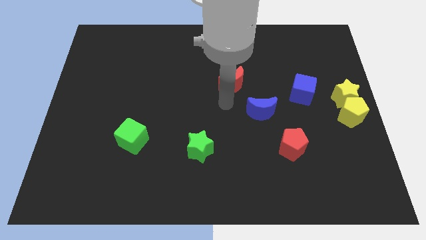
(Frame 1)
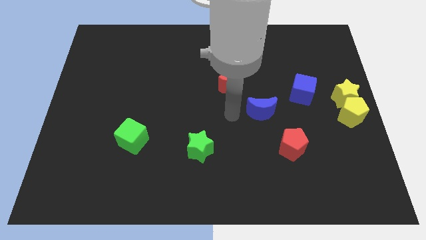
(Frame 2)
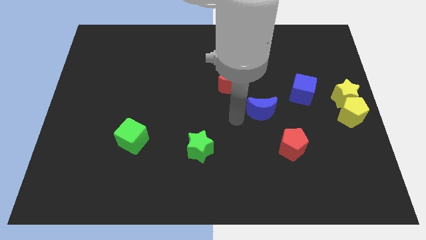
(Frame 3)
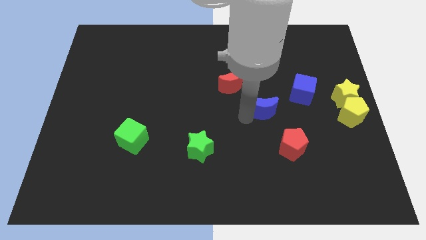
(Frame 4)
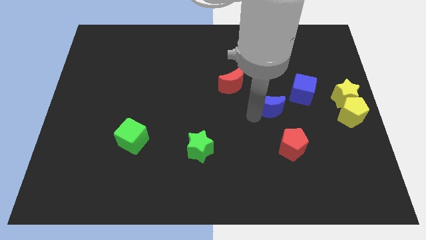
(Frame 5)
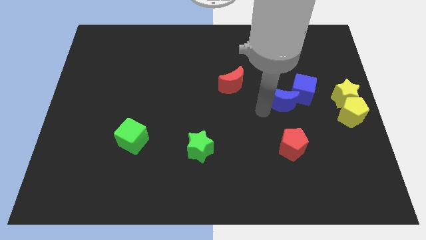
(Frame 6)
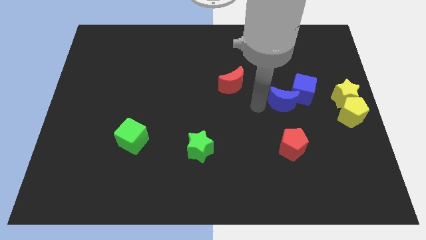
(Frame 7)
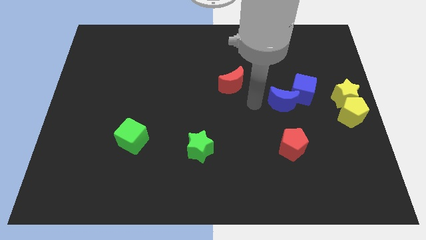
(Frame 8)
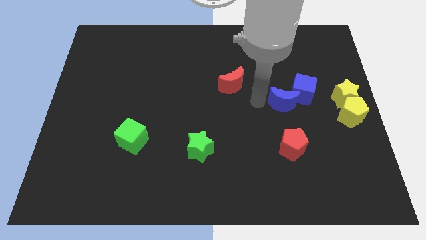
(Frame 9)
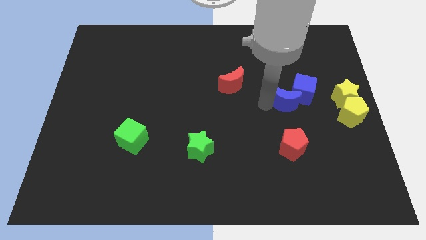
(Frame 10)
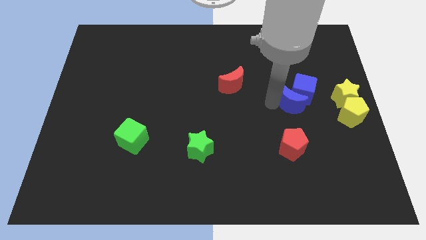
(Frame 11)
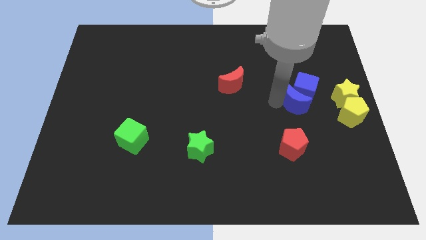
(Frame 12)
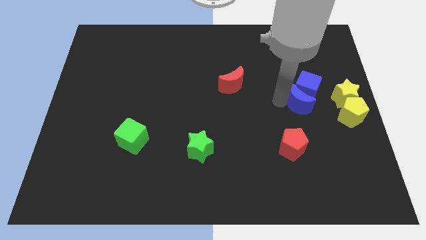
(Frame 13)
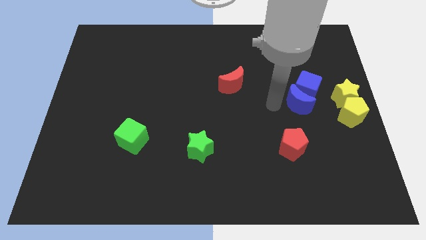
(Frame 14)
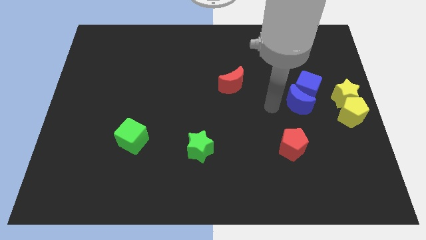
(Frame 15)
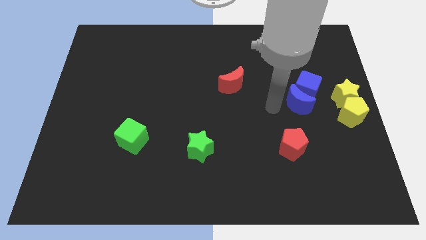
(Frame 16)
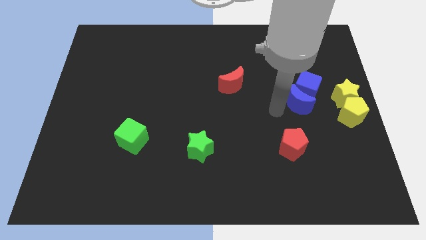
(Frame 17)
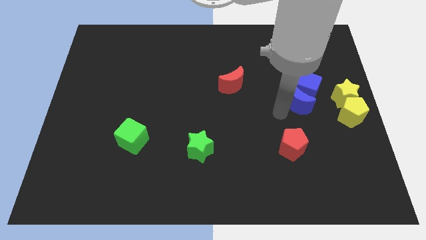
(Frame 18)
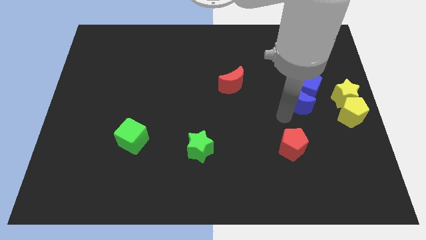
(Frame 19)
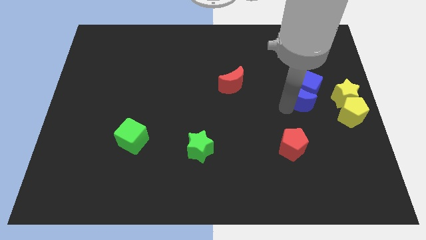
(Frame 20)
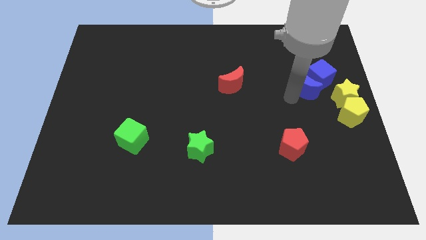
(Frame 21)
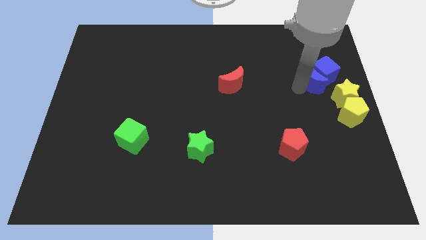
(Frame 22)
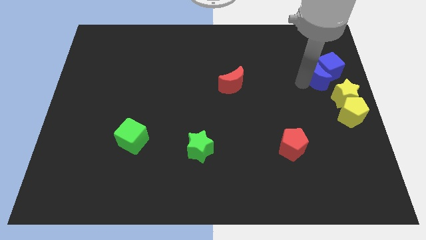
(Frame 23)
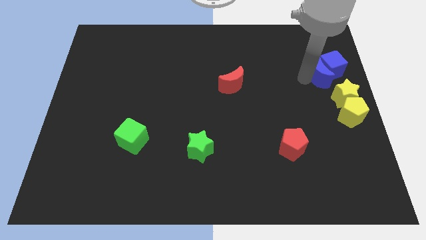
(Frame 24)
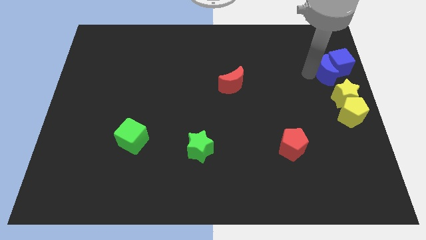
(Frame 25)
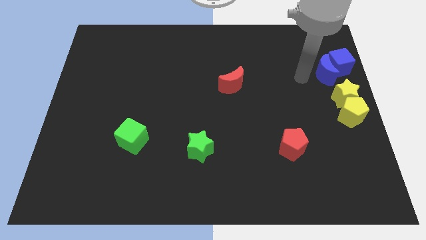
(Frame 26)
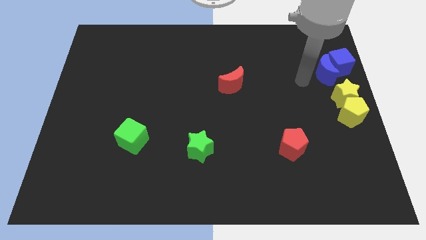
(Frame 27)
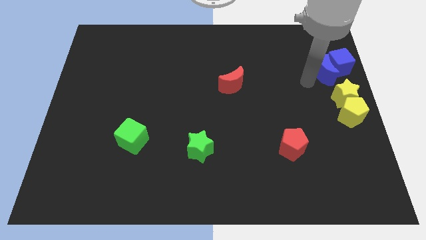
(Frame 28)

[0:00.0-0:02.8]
push the blue crescent along with the blue clue to the top side of the yellow star

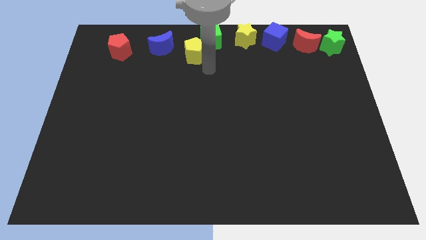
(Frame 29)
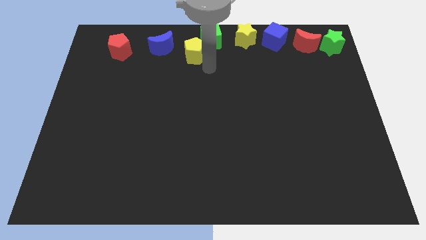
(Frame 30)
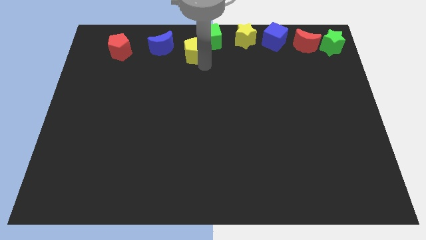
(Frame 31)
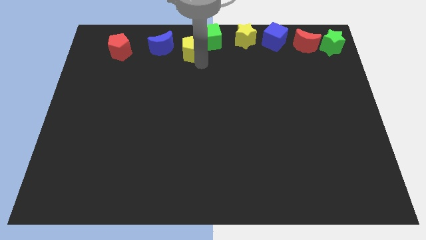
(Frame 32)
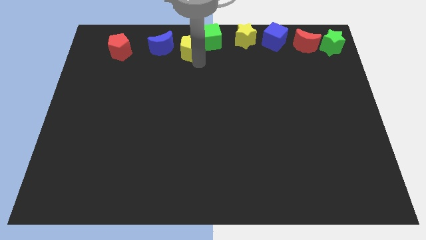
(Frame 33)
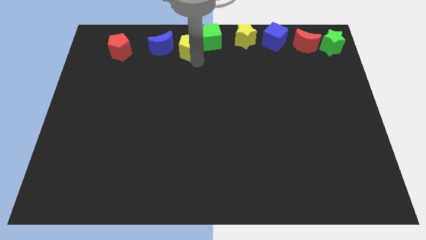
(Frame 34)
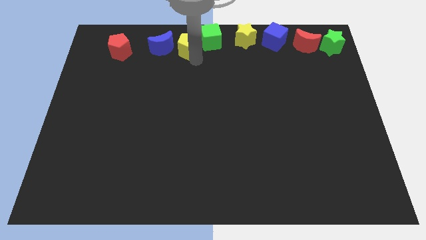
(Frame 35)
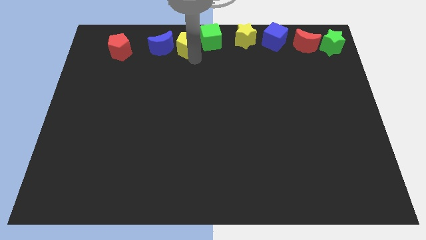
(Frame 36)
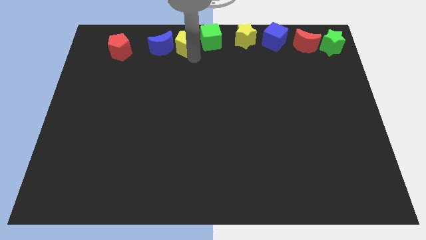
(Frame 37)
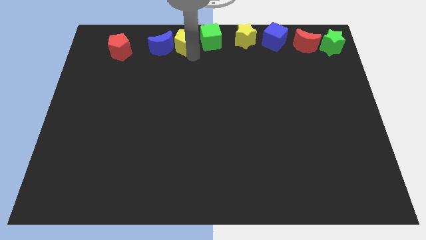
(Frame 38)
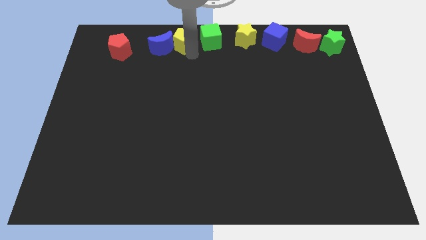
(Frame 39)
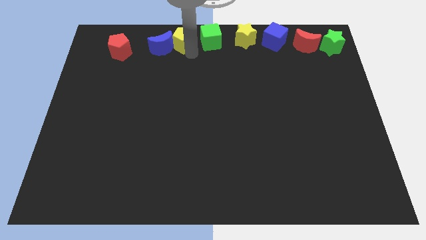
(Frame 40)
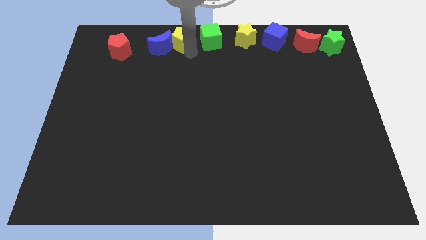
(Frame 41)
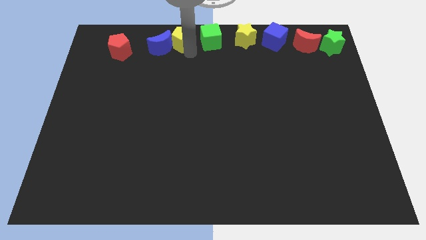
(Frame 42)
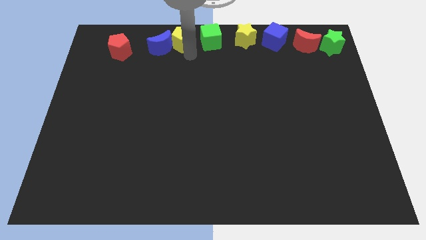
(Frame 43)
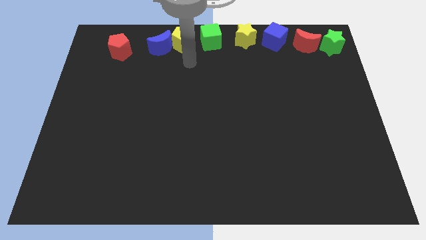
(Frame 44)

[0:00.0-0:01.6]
move the yellow pentagon into the blue crescent

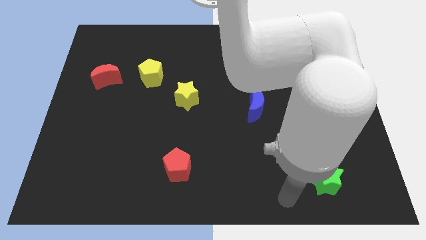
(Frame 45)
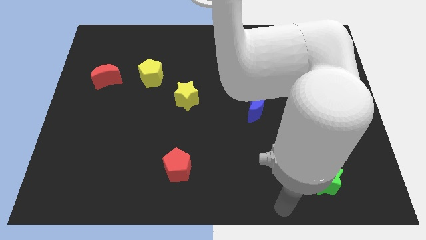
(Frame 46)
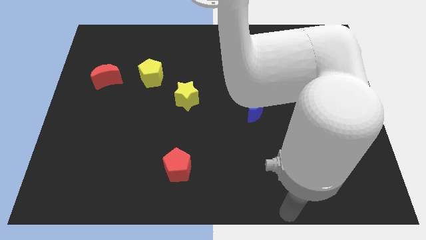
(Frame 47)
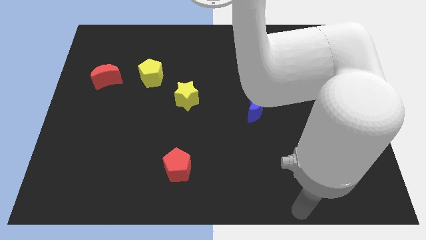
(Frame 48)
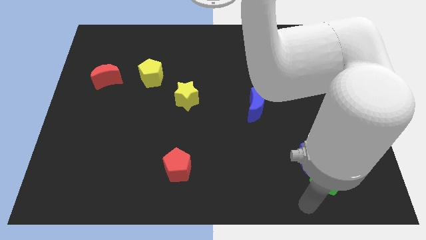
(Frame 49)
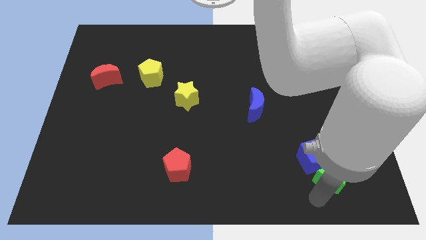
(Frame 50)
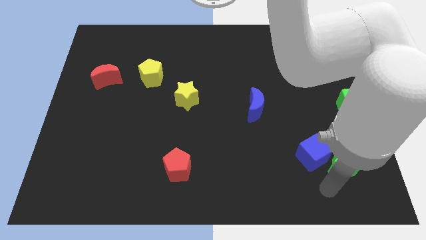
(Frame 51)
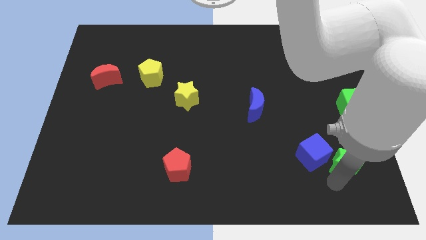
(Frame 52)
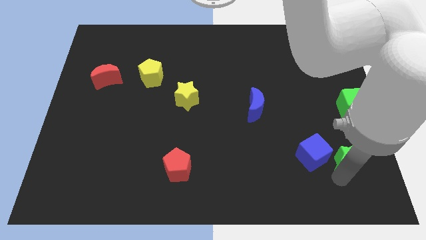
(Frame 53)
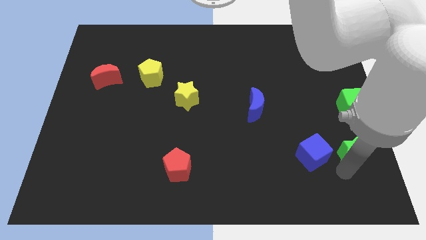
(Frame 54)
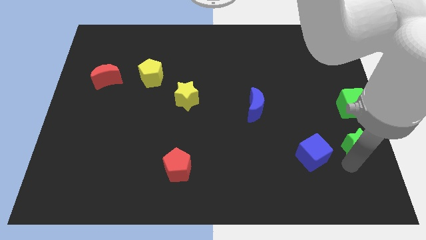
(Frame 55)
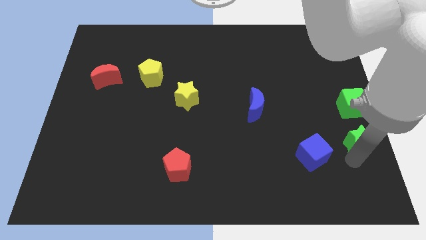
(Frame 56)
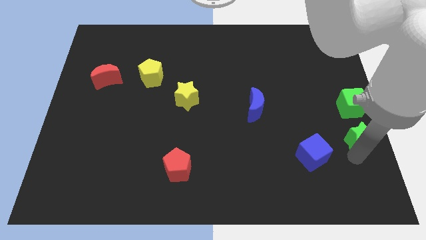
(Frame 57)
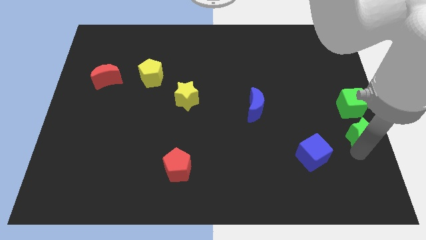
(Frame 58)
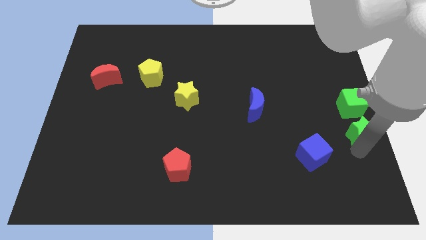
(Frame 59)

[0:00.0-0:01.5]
place the green star to the bottom side of the green cube

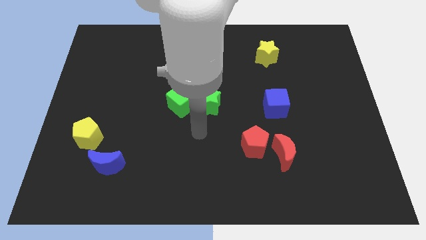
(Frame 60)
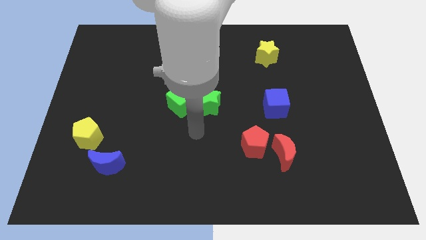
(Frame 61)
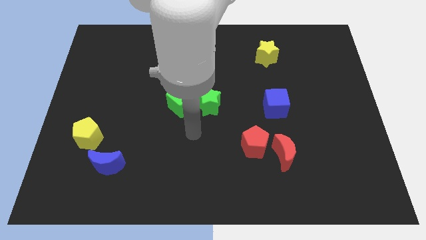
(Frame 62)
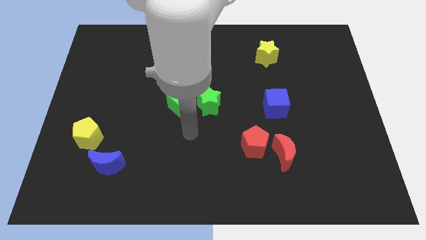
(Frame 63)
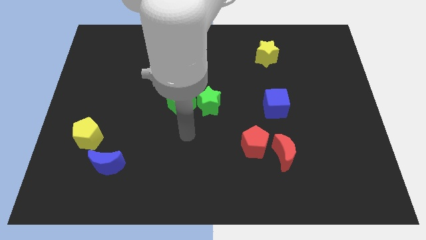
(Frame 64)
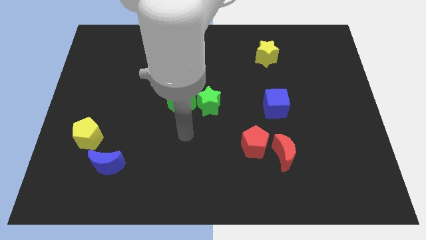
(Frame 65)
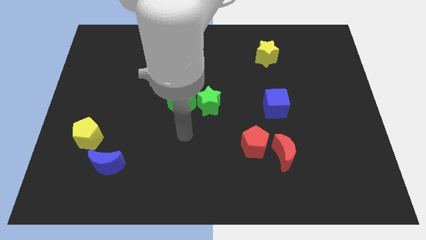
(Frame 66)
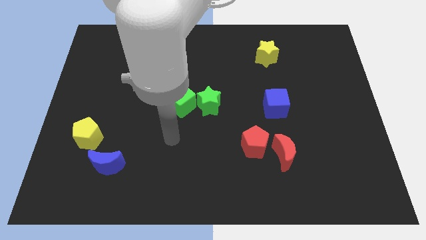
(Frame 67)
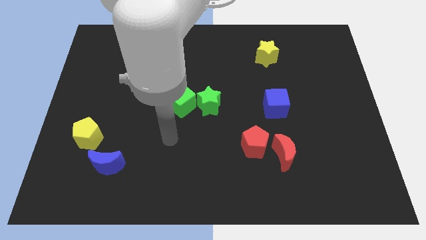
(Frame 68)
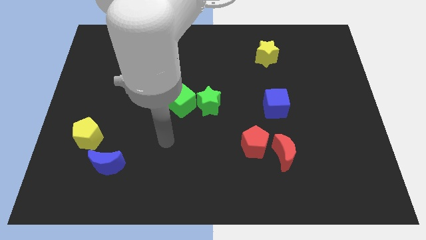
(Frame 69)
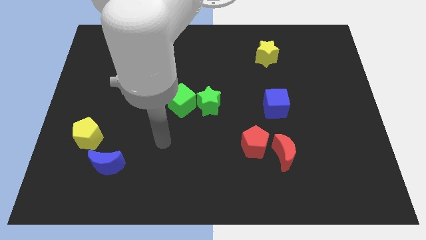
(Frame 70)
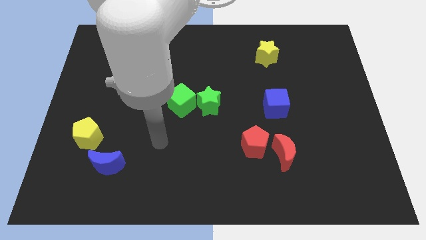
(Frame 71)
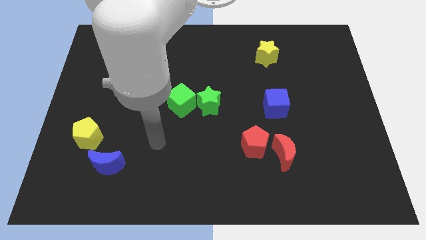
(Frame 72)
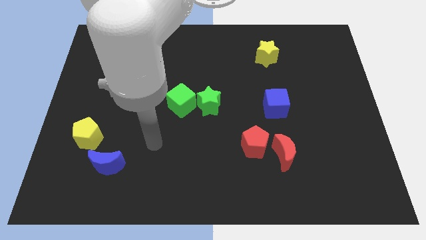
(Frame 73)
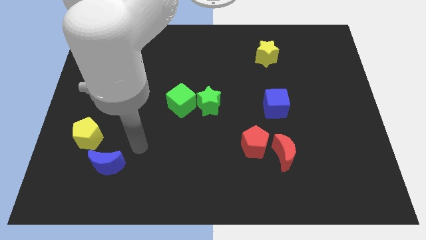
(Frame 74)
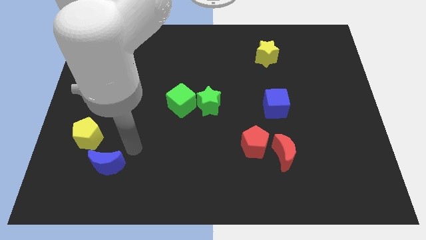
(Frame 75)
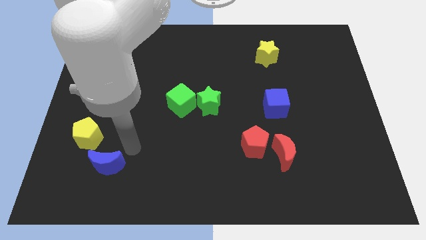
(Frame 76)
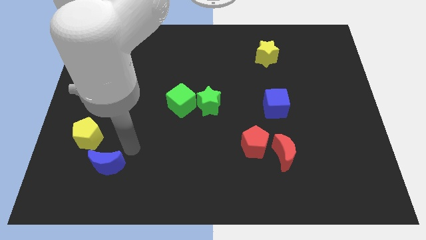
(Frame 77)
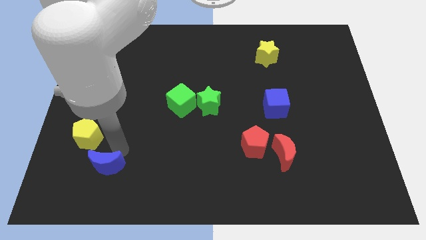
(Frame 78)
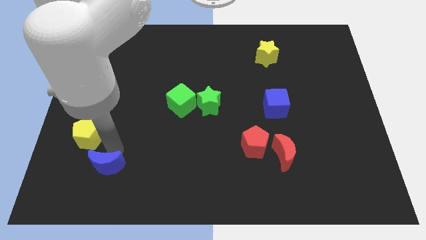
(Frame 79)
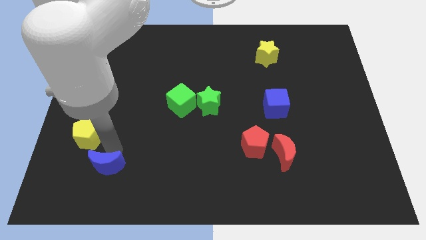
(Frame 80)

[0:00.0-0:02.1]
move the arm to the top of the blue crescent

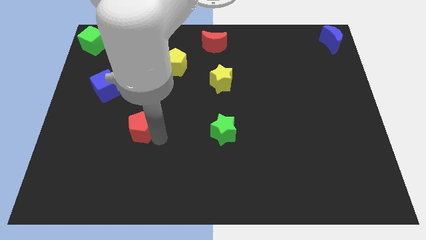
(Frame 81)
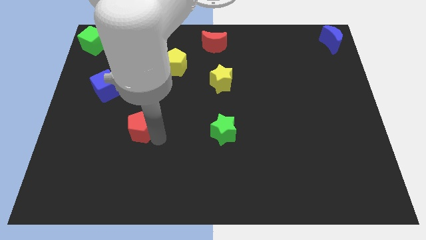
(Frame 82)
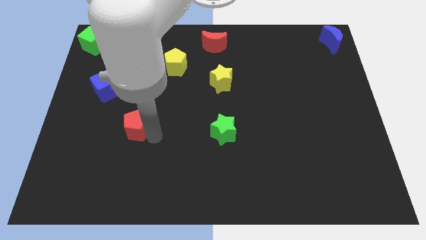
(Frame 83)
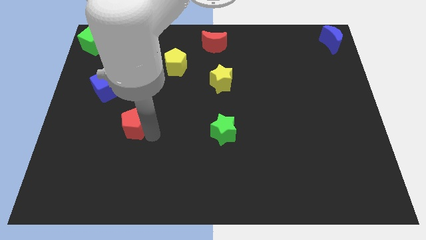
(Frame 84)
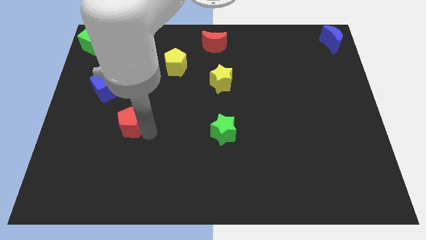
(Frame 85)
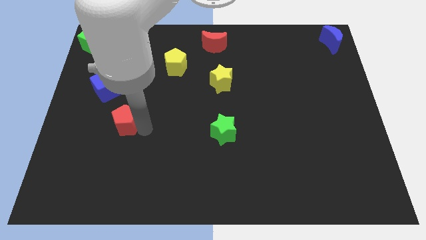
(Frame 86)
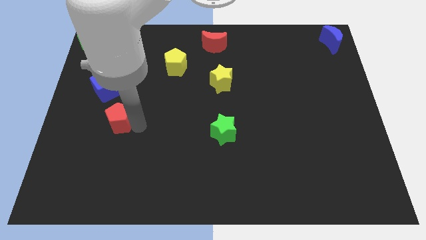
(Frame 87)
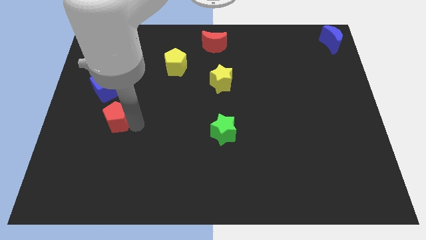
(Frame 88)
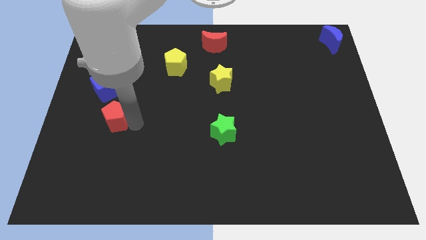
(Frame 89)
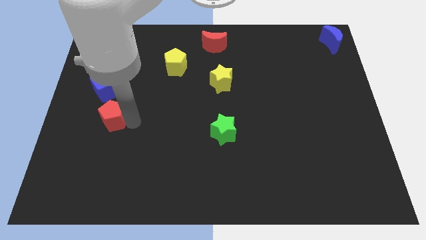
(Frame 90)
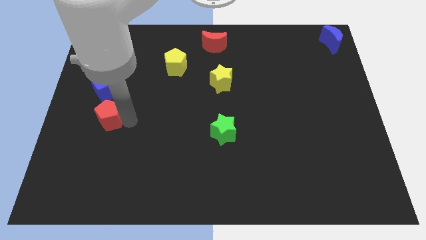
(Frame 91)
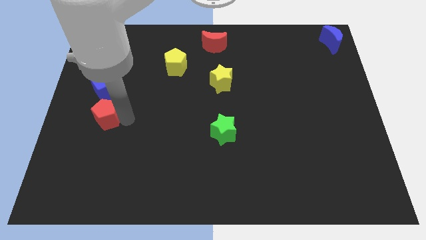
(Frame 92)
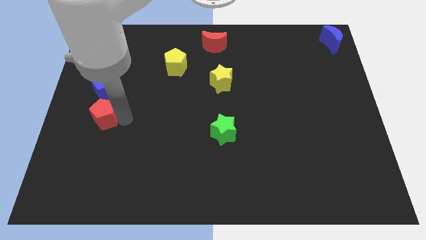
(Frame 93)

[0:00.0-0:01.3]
place the red pentagon below the blue cube
